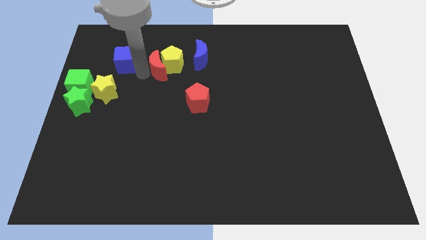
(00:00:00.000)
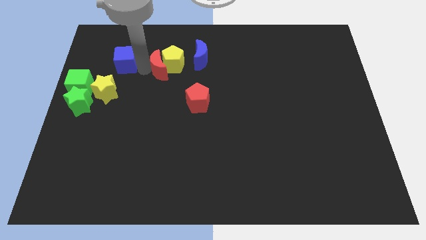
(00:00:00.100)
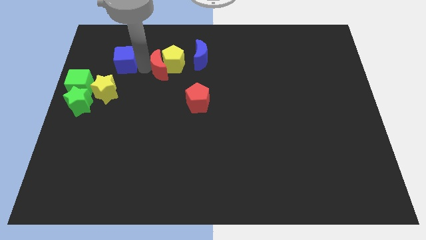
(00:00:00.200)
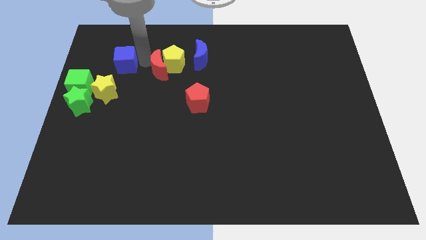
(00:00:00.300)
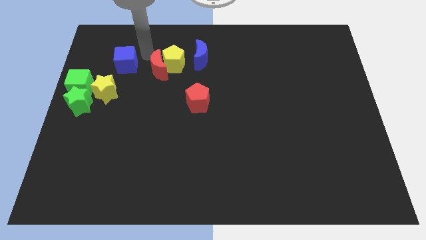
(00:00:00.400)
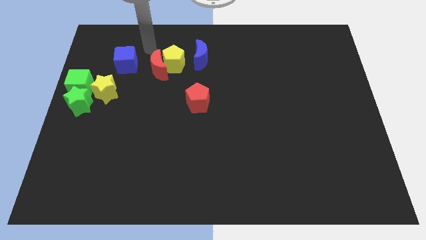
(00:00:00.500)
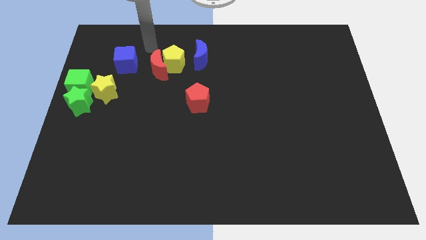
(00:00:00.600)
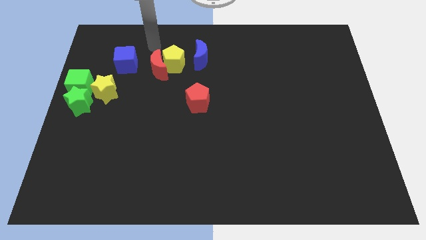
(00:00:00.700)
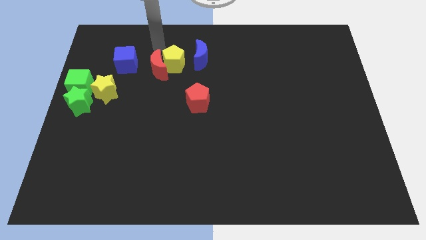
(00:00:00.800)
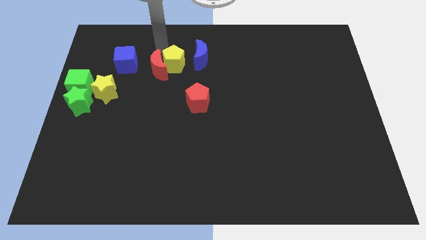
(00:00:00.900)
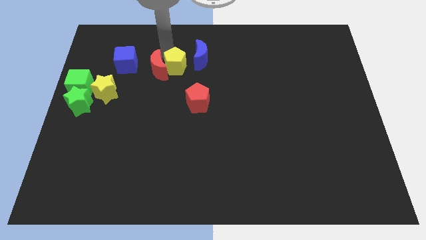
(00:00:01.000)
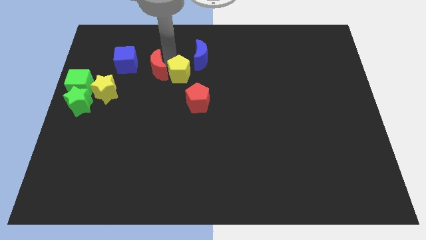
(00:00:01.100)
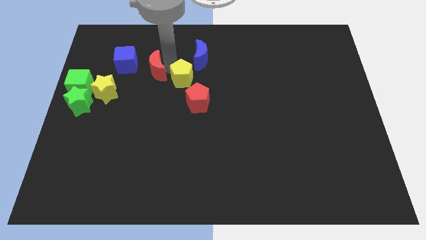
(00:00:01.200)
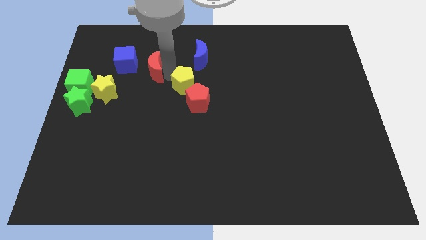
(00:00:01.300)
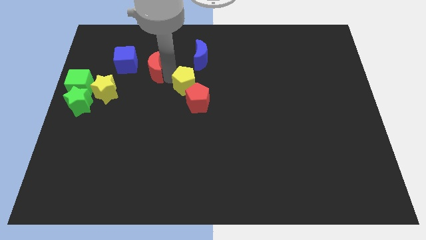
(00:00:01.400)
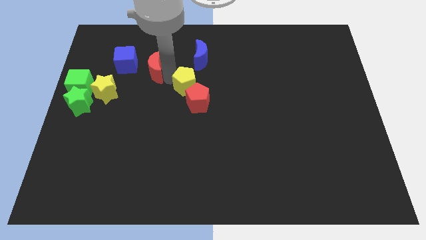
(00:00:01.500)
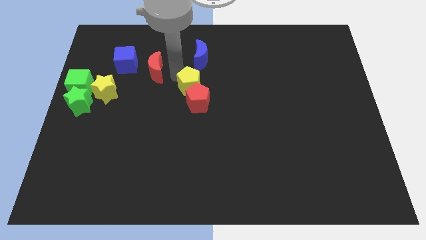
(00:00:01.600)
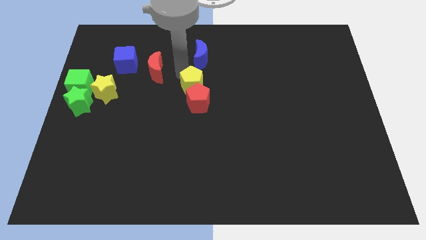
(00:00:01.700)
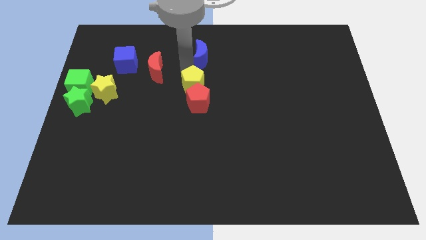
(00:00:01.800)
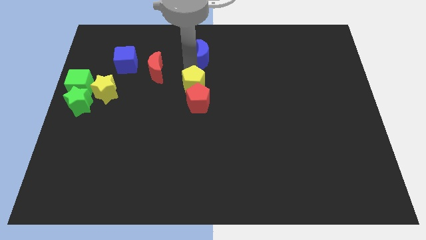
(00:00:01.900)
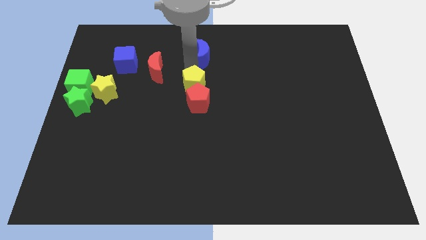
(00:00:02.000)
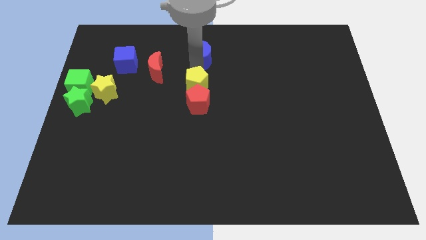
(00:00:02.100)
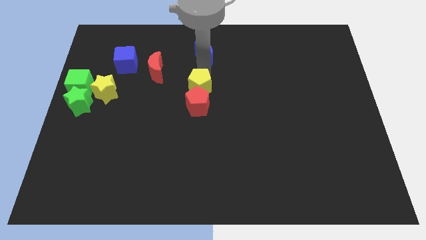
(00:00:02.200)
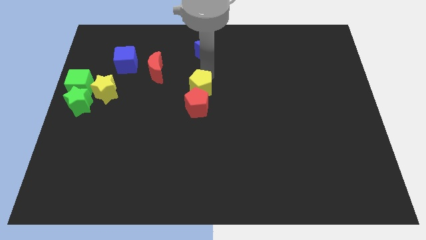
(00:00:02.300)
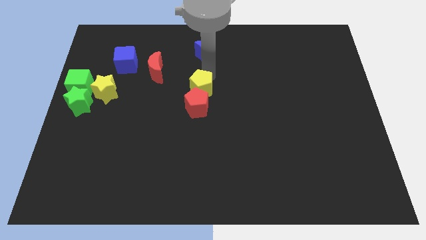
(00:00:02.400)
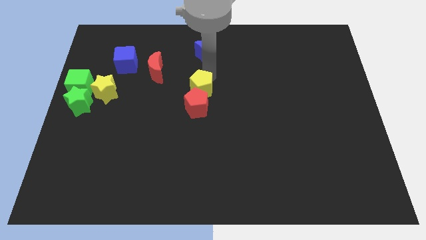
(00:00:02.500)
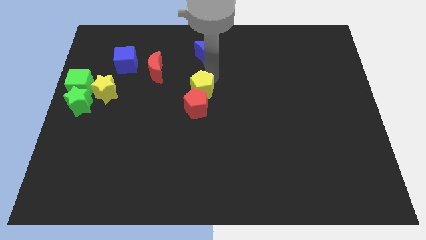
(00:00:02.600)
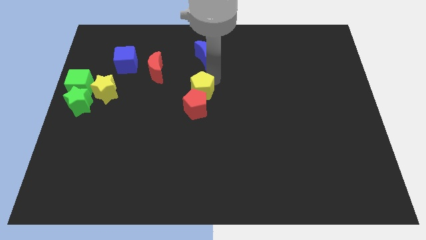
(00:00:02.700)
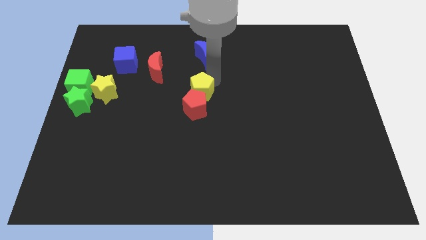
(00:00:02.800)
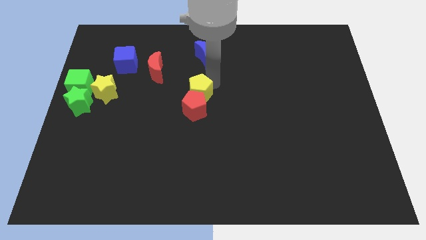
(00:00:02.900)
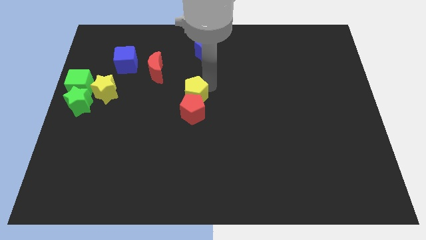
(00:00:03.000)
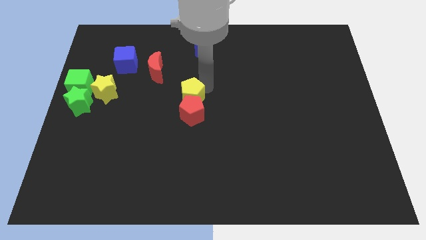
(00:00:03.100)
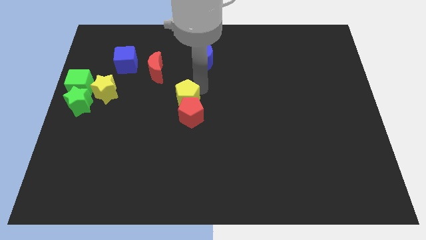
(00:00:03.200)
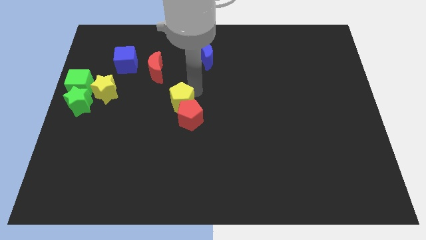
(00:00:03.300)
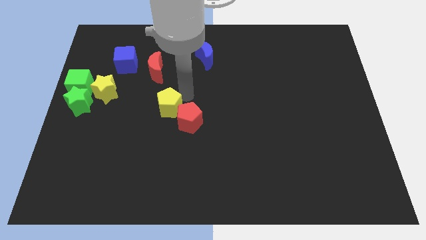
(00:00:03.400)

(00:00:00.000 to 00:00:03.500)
push the red and yellow pentagons towards the bottom side of the board

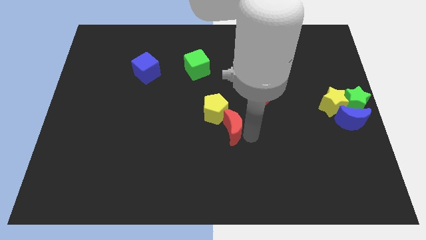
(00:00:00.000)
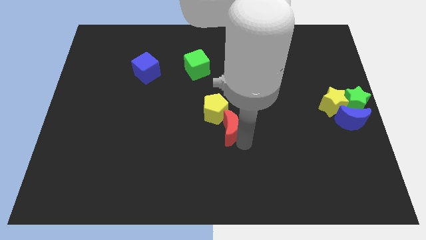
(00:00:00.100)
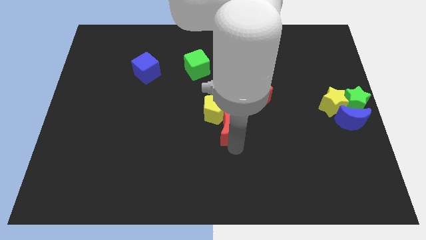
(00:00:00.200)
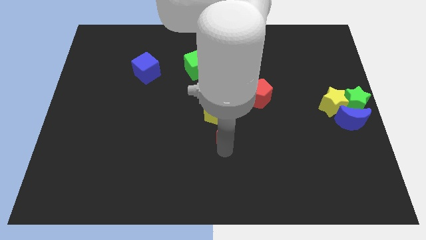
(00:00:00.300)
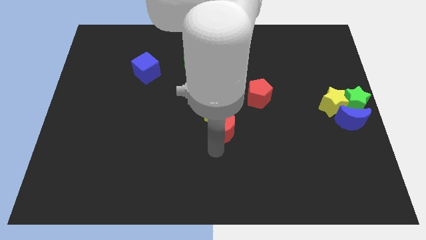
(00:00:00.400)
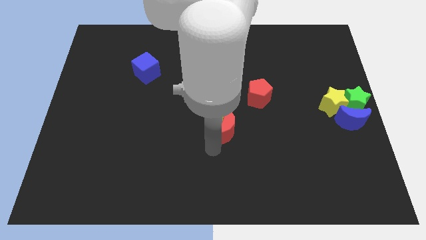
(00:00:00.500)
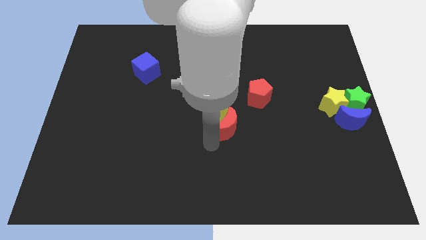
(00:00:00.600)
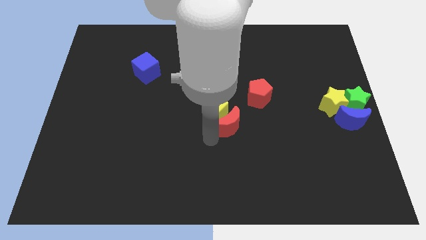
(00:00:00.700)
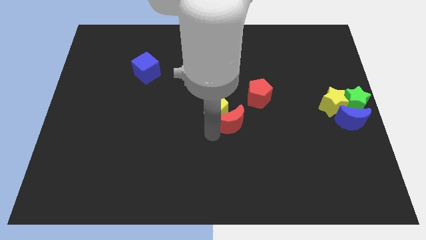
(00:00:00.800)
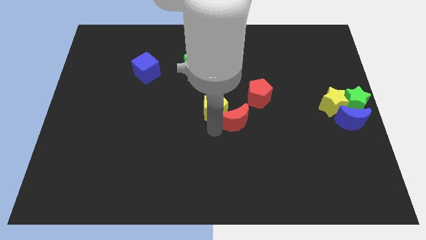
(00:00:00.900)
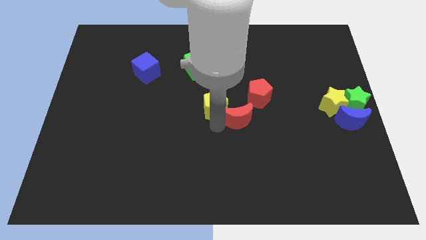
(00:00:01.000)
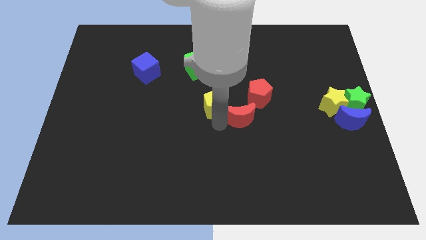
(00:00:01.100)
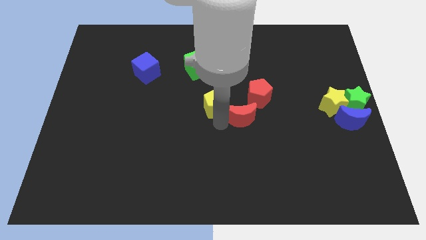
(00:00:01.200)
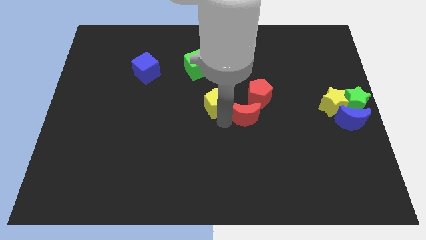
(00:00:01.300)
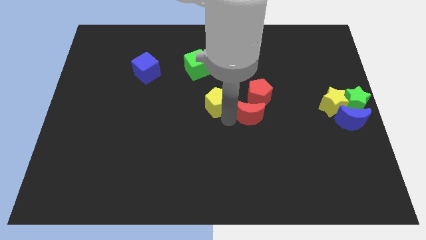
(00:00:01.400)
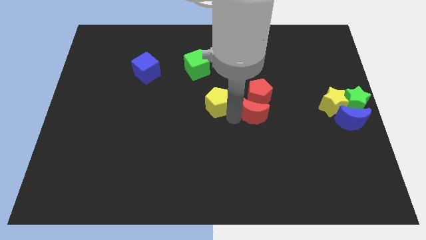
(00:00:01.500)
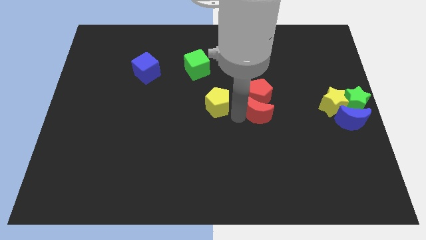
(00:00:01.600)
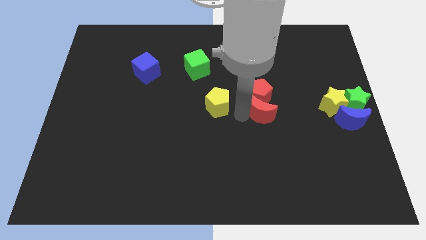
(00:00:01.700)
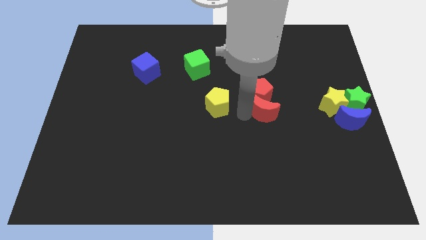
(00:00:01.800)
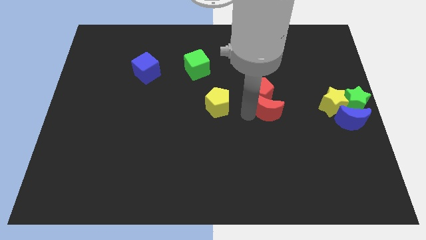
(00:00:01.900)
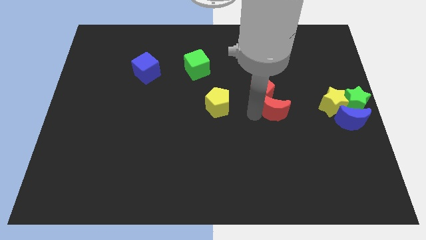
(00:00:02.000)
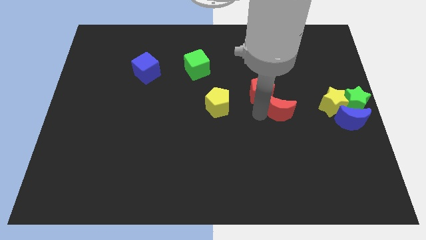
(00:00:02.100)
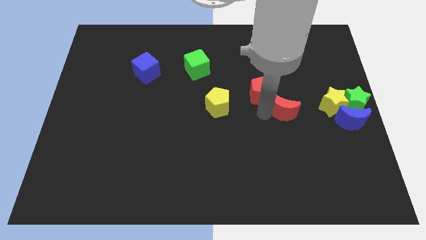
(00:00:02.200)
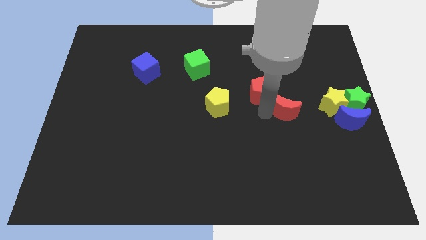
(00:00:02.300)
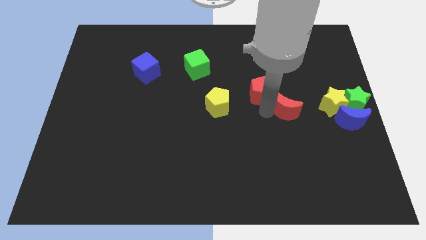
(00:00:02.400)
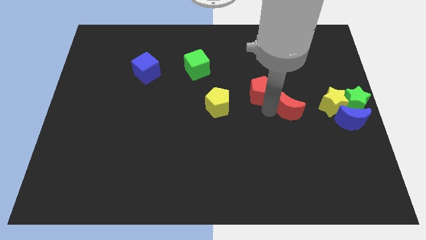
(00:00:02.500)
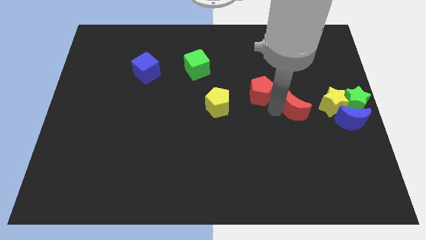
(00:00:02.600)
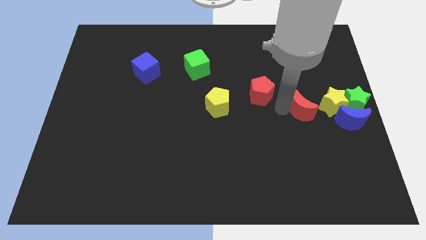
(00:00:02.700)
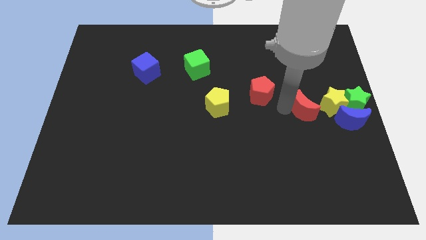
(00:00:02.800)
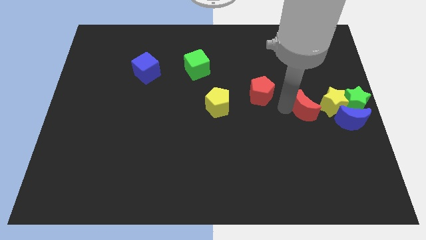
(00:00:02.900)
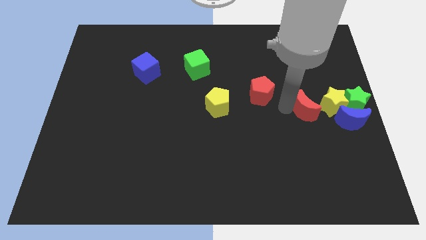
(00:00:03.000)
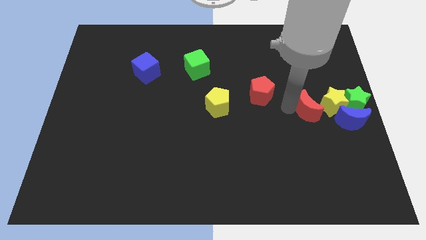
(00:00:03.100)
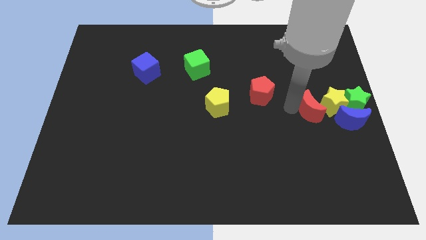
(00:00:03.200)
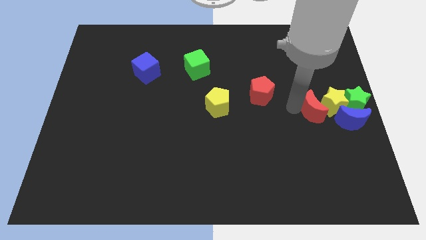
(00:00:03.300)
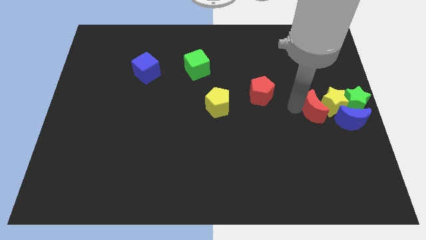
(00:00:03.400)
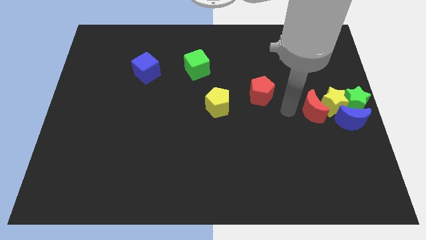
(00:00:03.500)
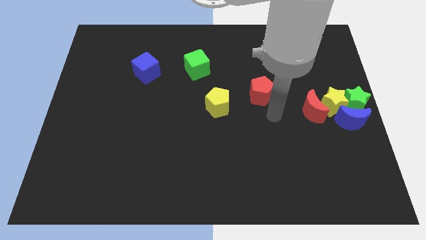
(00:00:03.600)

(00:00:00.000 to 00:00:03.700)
place the red crescent left to the yellow star

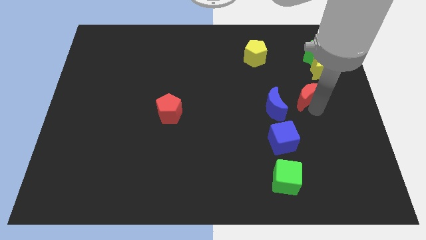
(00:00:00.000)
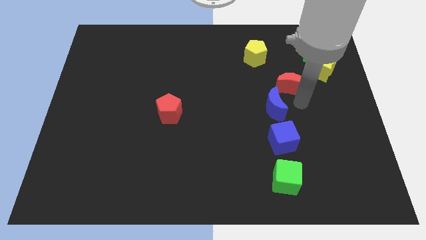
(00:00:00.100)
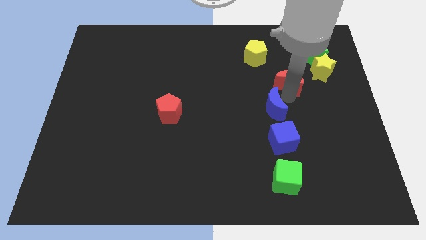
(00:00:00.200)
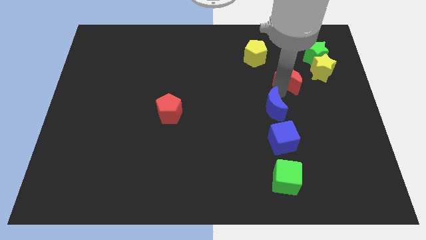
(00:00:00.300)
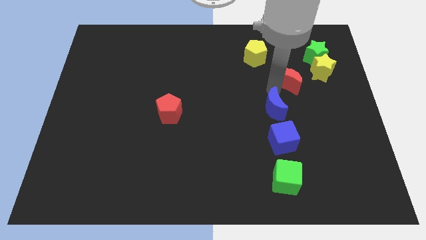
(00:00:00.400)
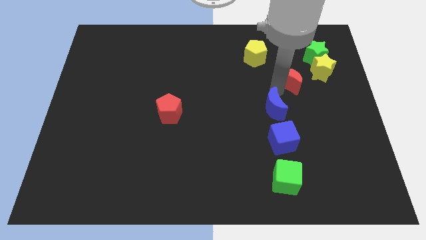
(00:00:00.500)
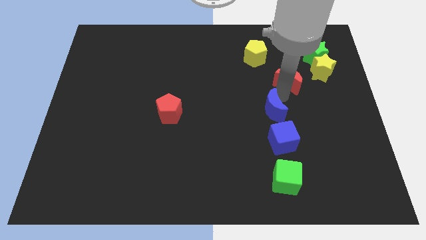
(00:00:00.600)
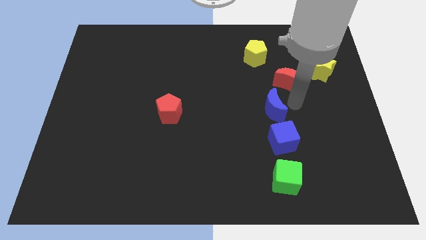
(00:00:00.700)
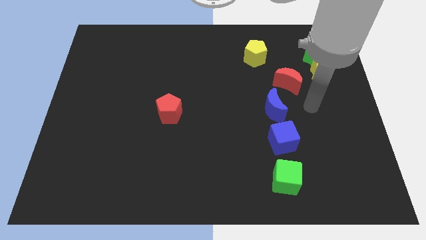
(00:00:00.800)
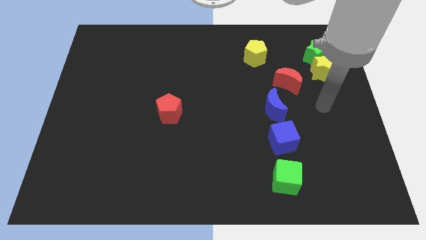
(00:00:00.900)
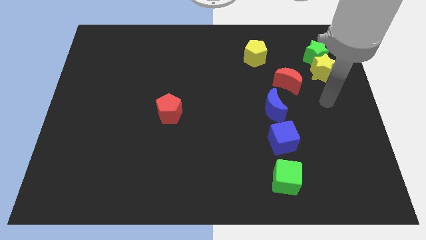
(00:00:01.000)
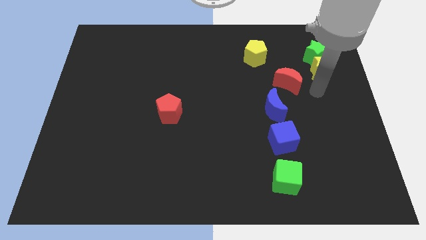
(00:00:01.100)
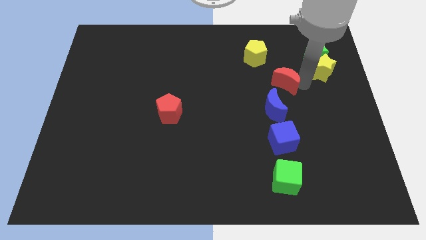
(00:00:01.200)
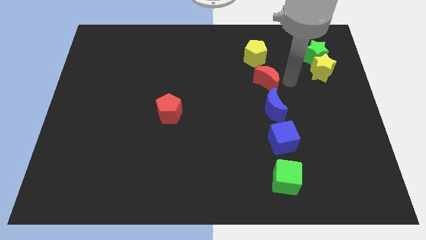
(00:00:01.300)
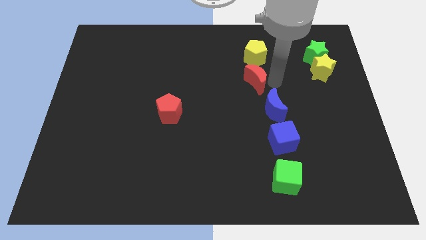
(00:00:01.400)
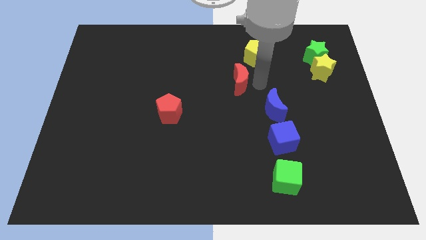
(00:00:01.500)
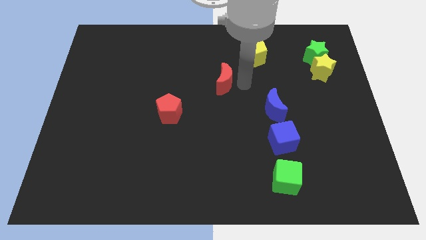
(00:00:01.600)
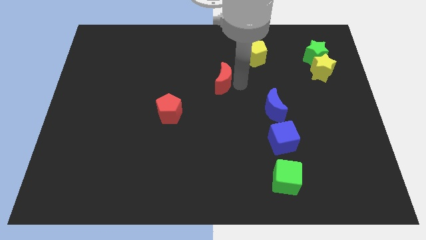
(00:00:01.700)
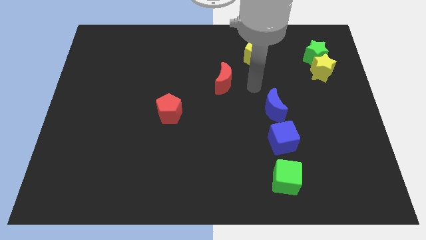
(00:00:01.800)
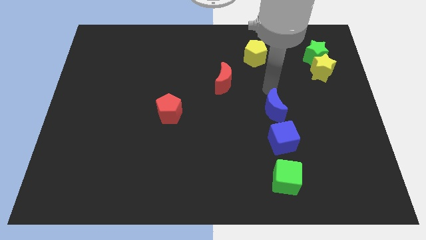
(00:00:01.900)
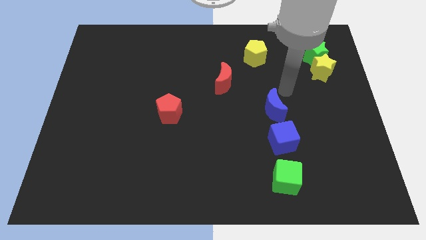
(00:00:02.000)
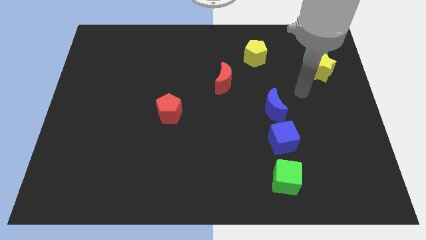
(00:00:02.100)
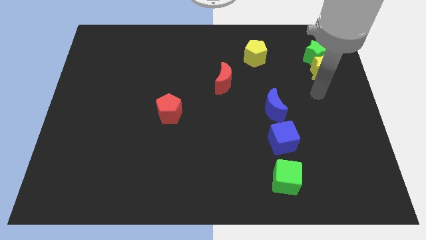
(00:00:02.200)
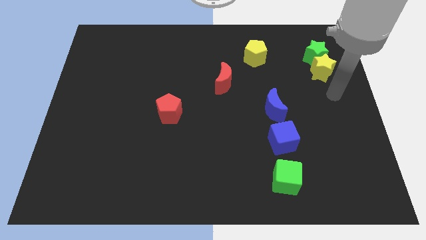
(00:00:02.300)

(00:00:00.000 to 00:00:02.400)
push the red crescent towards the center of the board
